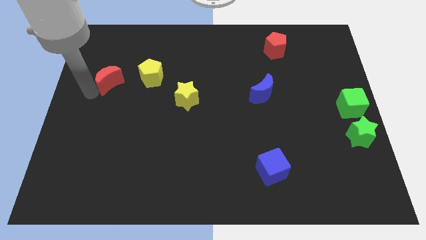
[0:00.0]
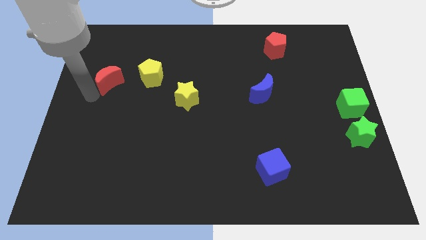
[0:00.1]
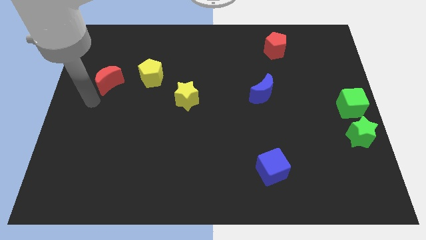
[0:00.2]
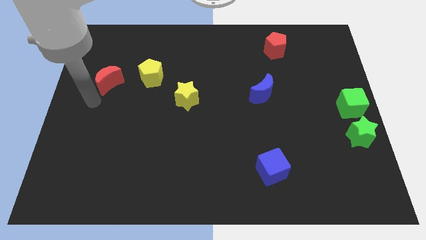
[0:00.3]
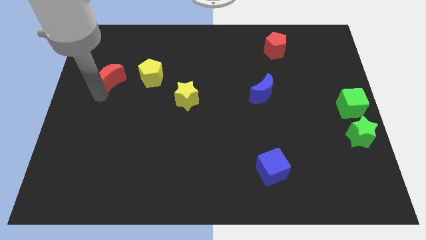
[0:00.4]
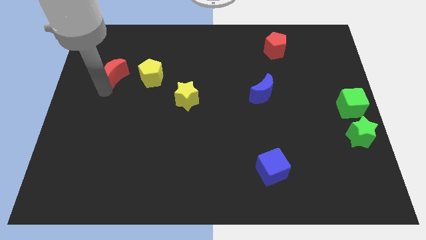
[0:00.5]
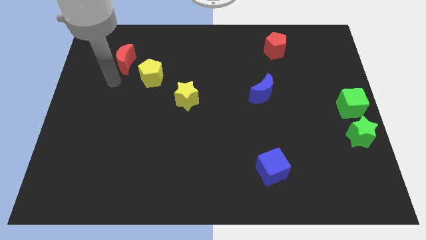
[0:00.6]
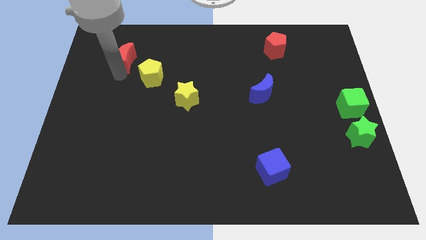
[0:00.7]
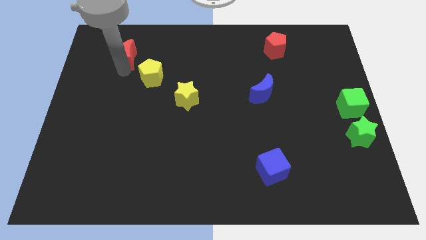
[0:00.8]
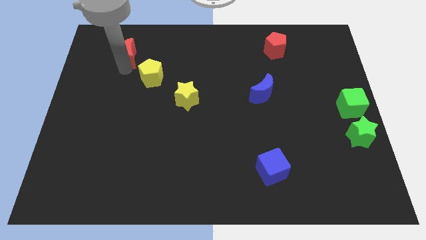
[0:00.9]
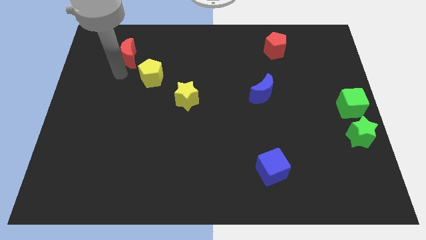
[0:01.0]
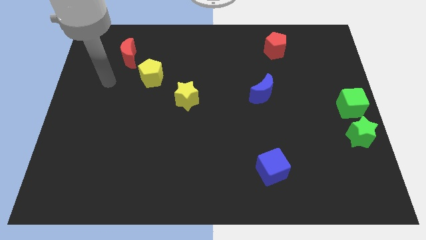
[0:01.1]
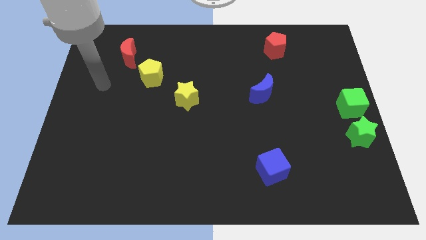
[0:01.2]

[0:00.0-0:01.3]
place the red moon to the top left side of the yellow pentagon

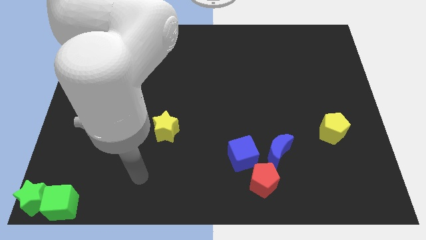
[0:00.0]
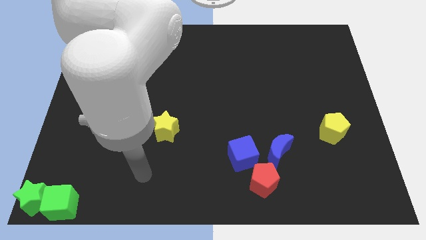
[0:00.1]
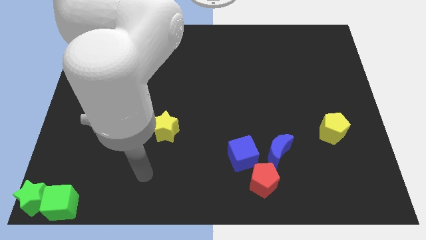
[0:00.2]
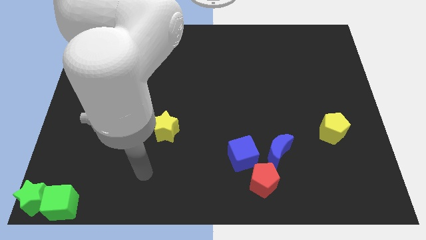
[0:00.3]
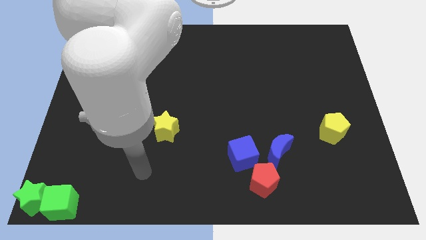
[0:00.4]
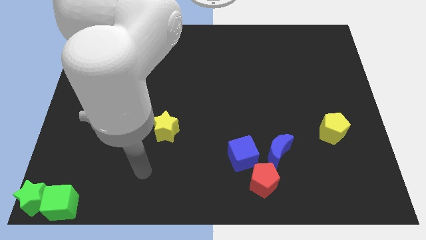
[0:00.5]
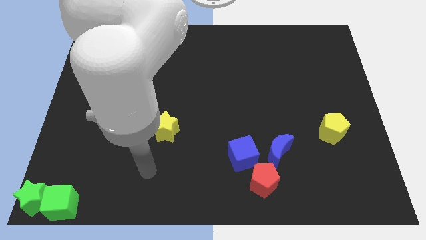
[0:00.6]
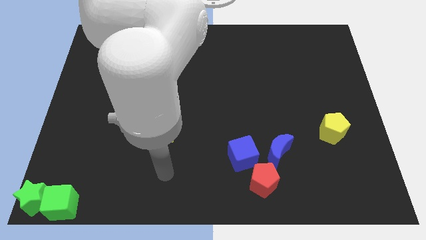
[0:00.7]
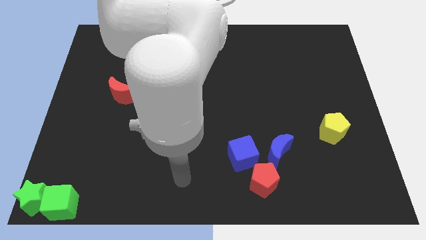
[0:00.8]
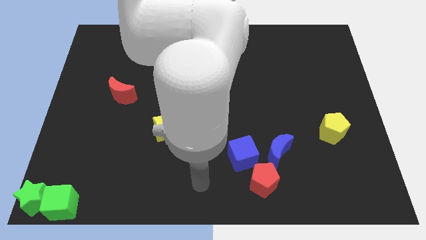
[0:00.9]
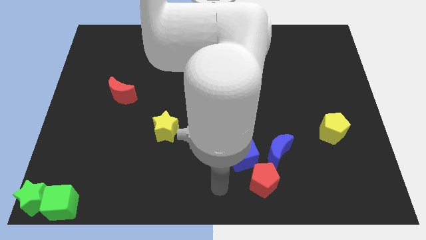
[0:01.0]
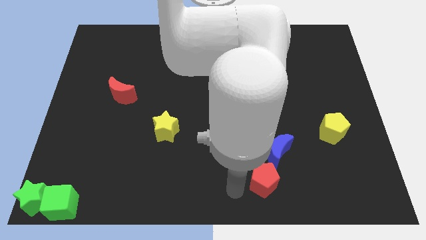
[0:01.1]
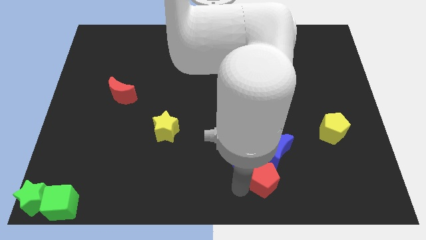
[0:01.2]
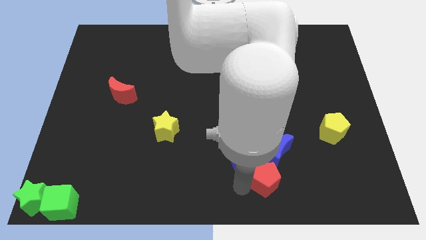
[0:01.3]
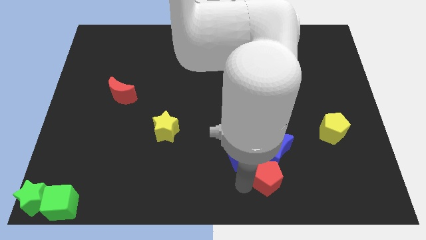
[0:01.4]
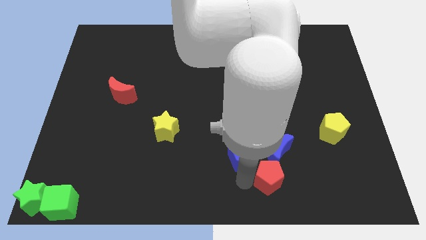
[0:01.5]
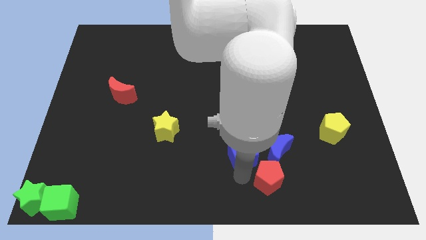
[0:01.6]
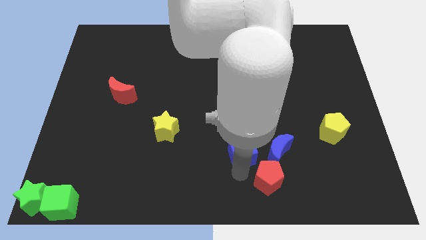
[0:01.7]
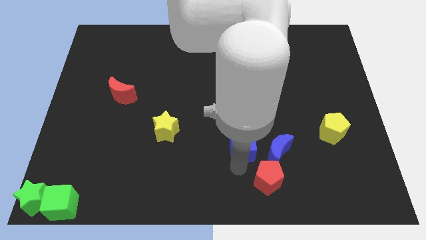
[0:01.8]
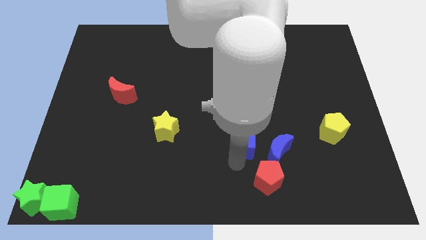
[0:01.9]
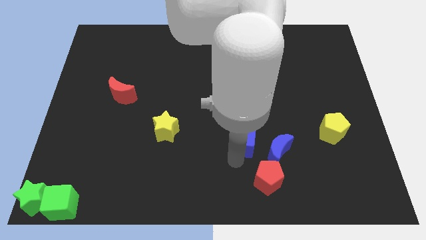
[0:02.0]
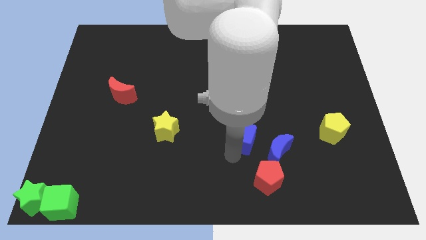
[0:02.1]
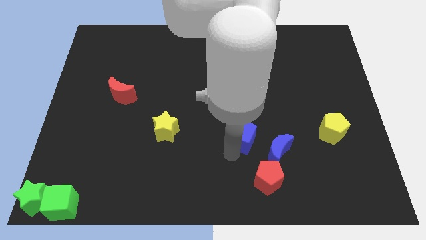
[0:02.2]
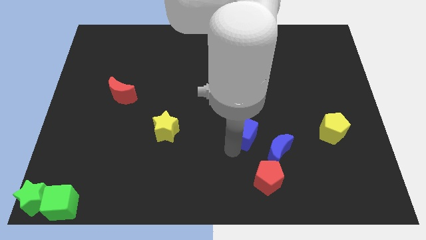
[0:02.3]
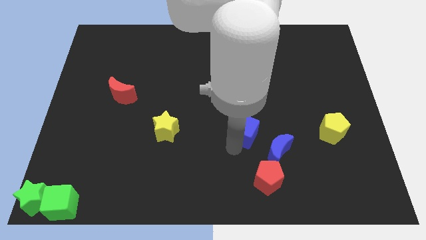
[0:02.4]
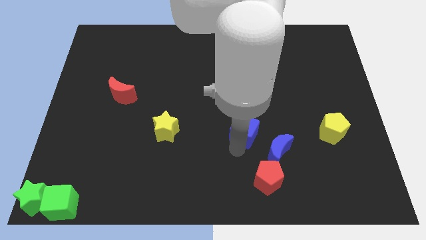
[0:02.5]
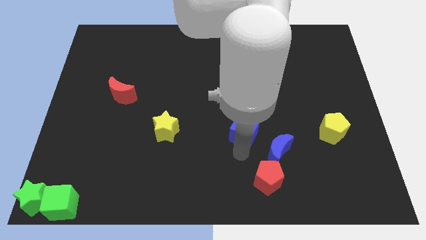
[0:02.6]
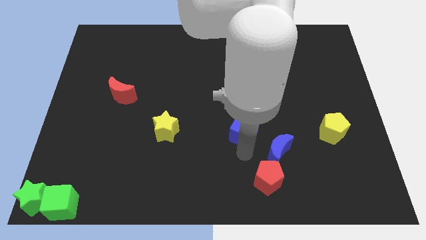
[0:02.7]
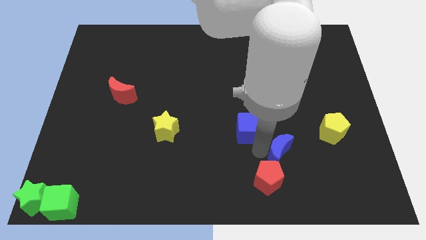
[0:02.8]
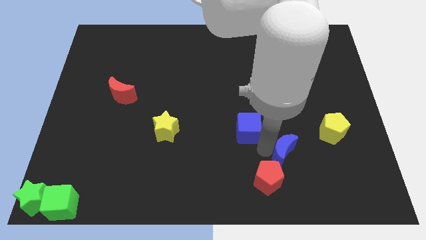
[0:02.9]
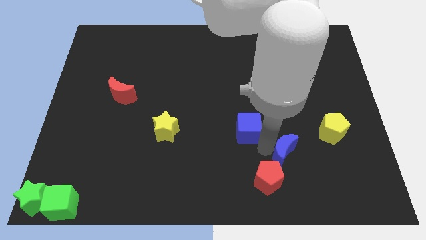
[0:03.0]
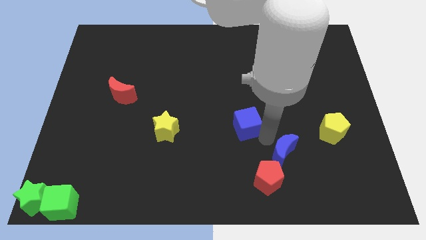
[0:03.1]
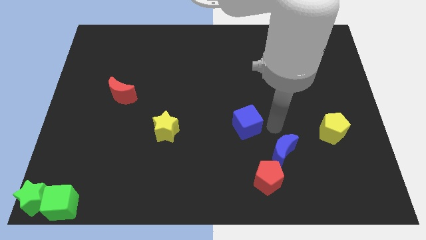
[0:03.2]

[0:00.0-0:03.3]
push arm in between blue blocks

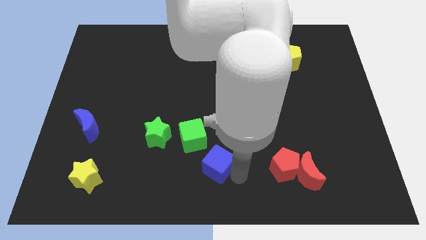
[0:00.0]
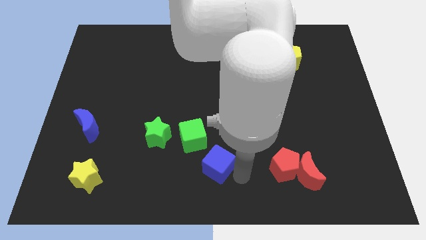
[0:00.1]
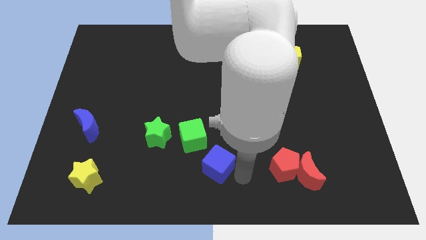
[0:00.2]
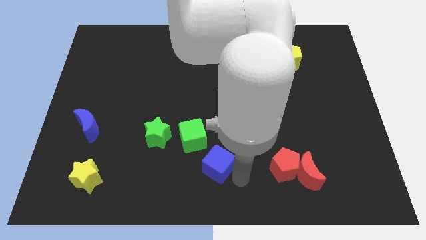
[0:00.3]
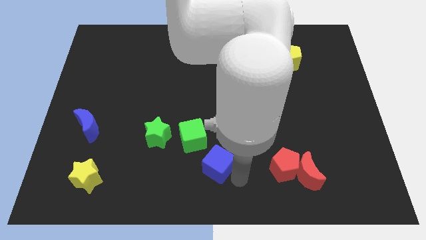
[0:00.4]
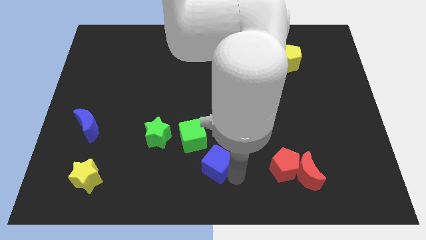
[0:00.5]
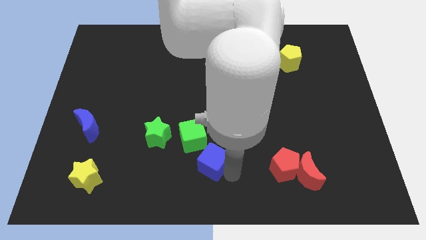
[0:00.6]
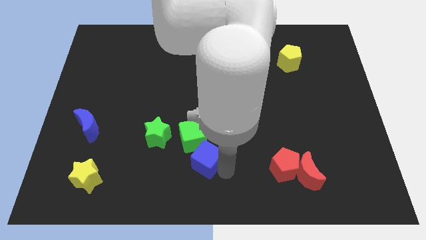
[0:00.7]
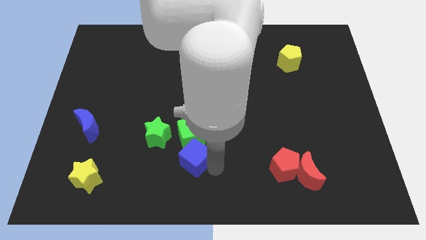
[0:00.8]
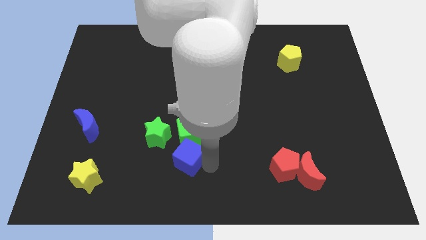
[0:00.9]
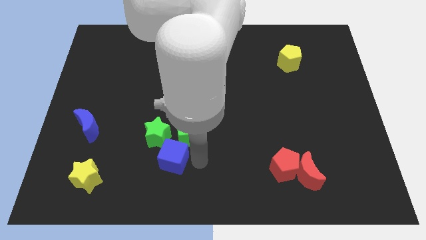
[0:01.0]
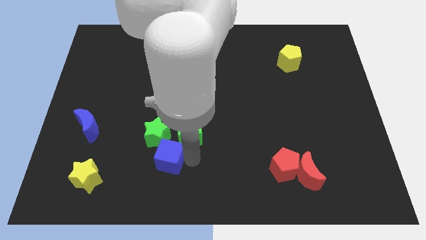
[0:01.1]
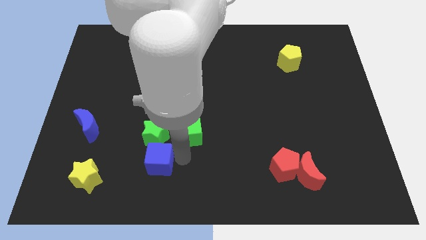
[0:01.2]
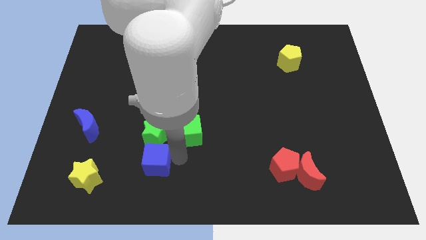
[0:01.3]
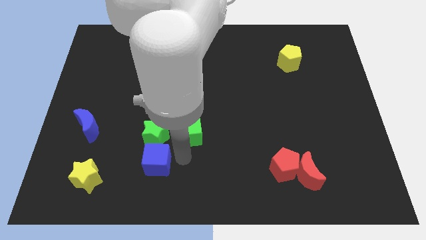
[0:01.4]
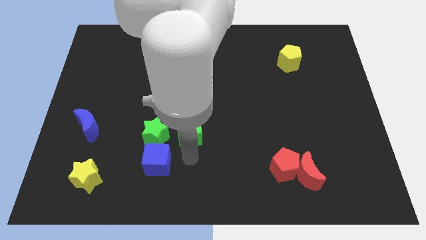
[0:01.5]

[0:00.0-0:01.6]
place the blue cube below the green star

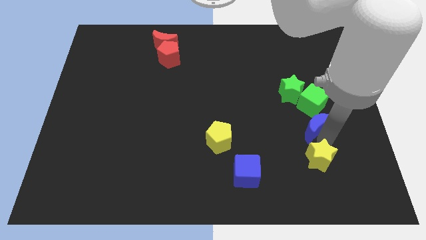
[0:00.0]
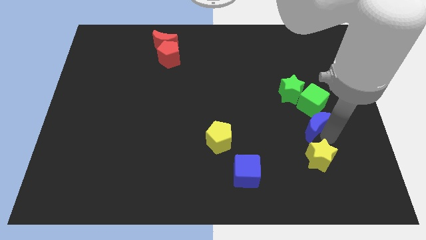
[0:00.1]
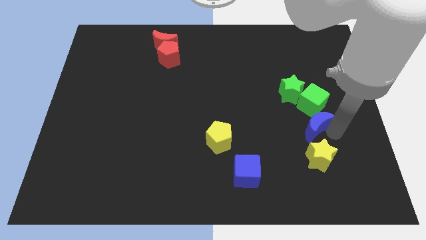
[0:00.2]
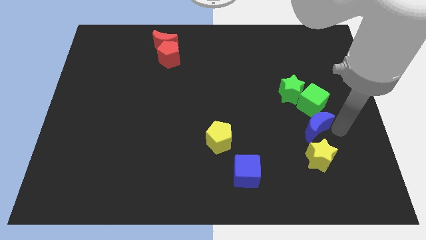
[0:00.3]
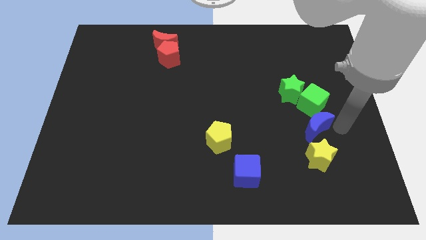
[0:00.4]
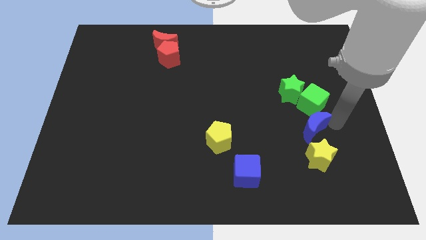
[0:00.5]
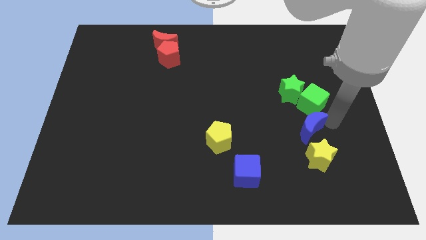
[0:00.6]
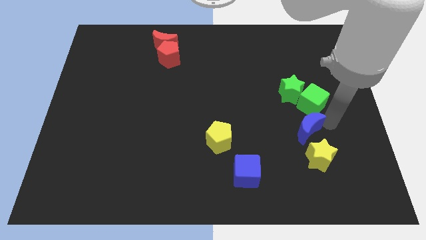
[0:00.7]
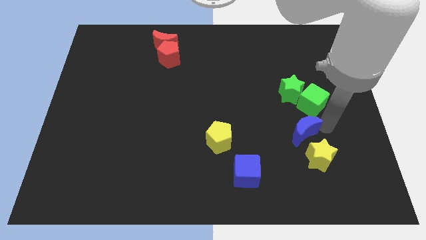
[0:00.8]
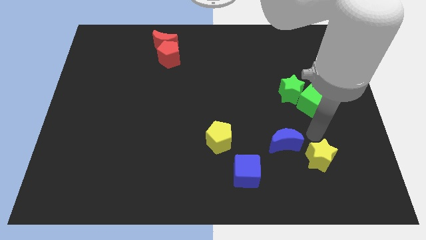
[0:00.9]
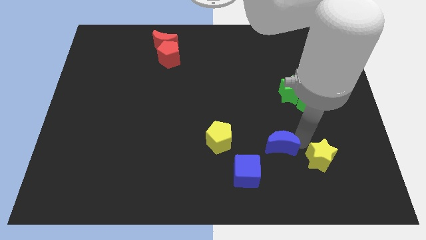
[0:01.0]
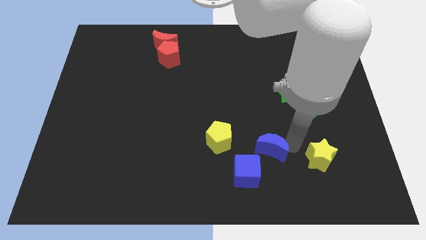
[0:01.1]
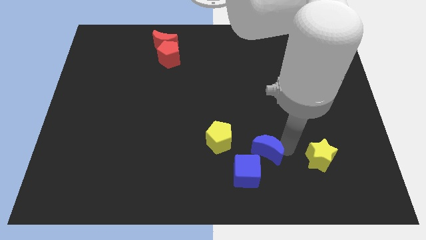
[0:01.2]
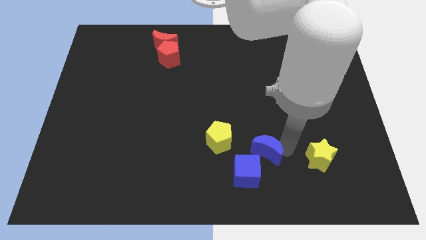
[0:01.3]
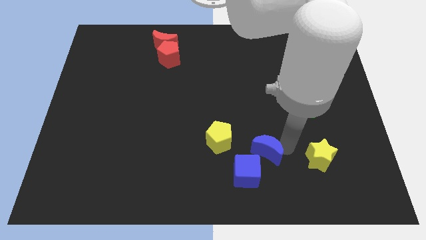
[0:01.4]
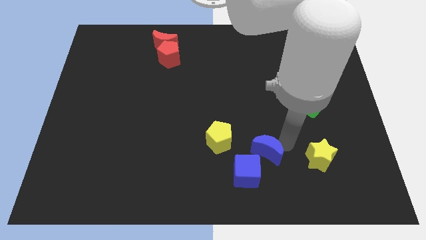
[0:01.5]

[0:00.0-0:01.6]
push the blue moon close to the blue cube

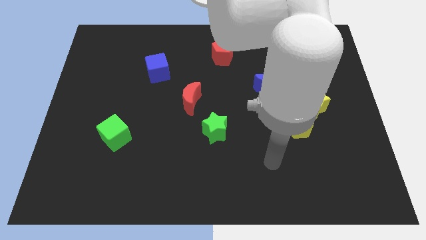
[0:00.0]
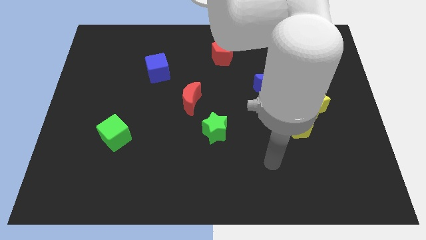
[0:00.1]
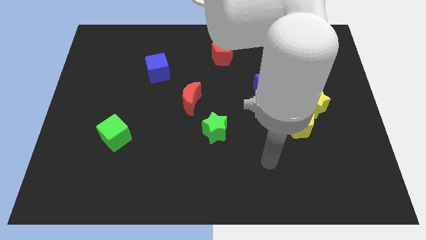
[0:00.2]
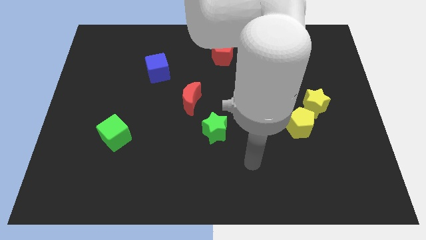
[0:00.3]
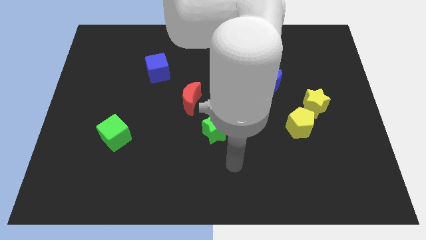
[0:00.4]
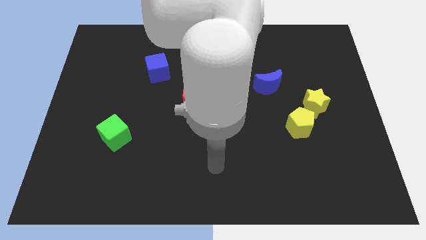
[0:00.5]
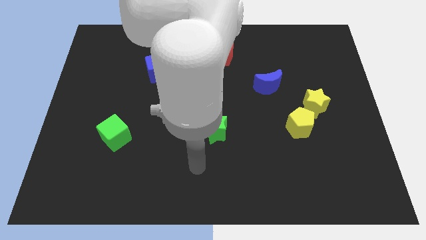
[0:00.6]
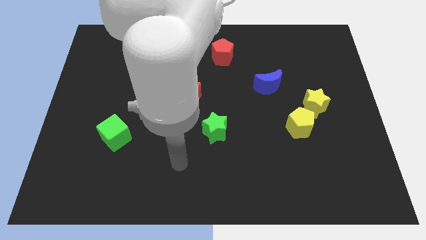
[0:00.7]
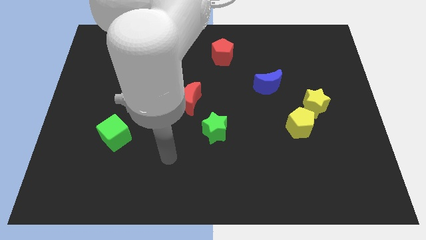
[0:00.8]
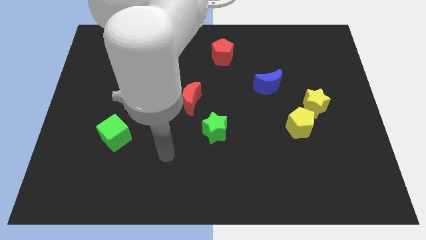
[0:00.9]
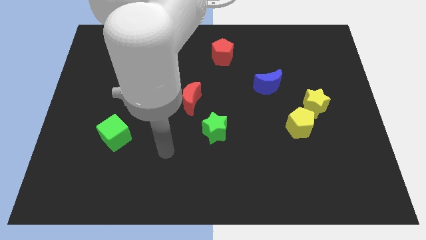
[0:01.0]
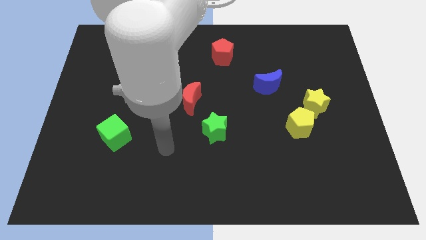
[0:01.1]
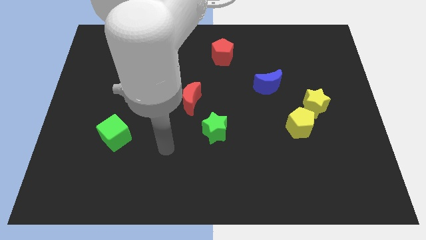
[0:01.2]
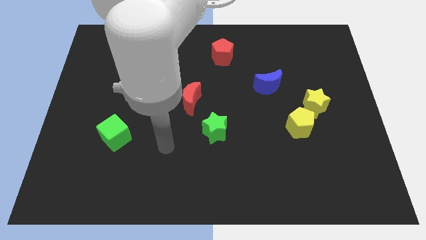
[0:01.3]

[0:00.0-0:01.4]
place the arm to the right of the green cube
